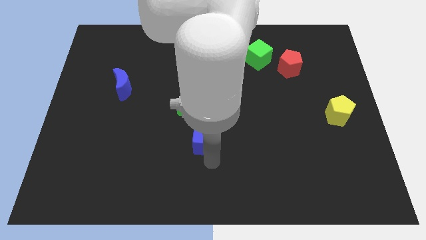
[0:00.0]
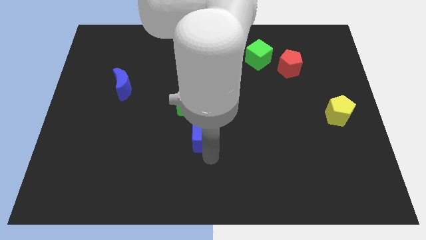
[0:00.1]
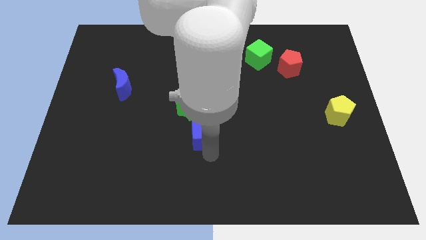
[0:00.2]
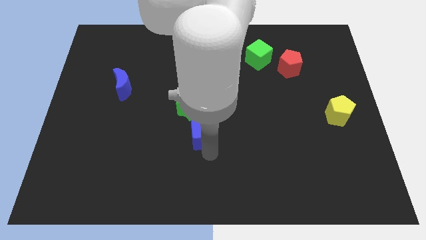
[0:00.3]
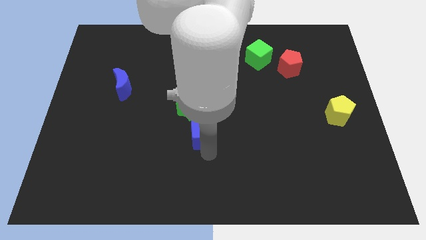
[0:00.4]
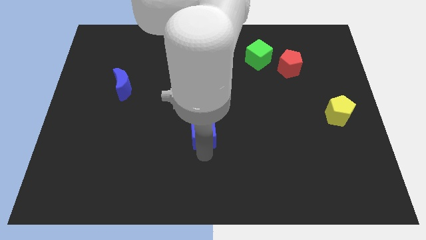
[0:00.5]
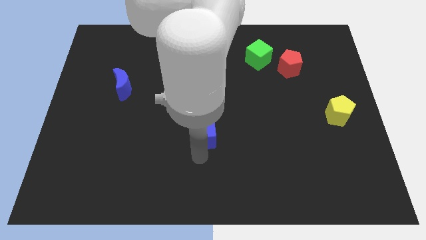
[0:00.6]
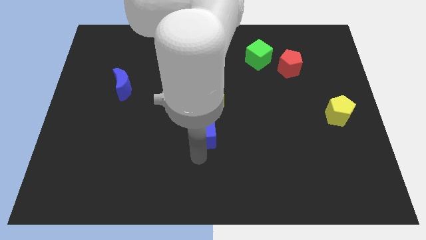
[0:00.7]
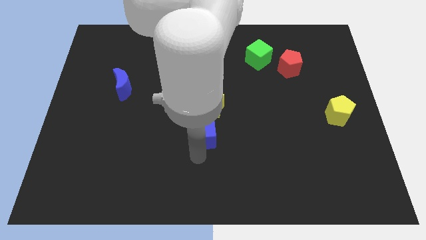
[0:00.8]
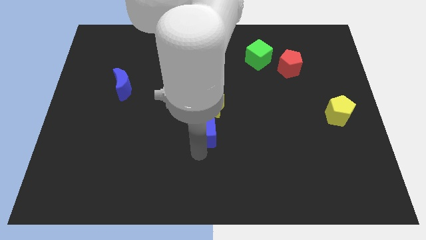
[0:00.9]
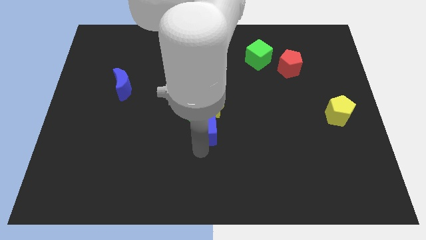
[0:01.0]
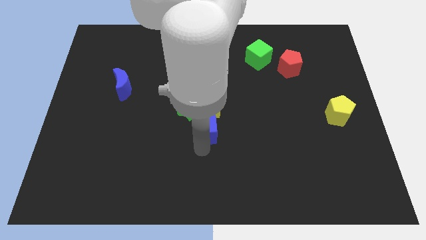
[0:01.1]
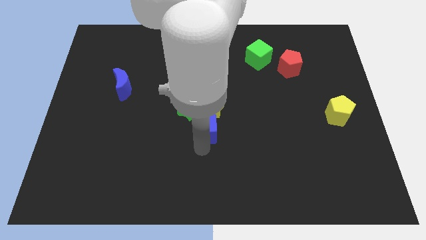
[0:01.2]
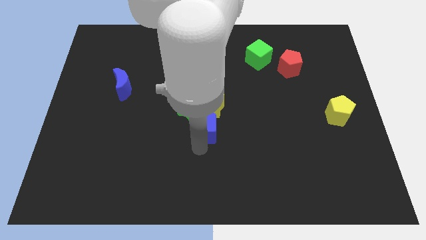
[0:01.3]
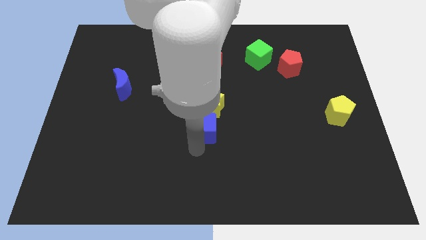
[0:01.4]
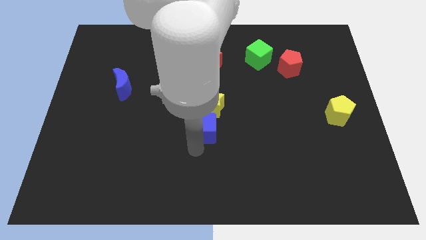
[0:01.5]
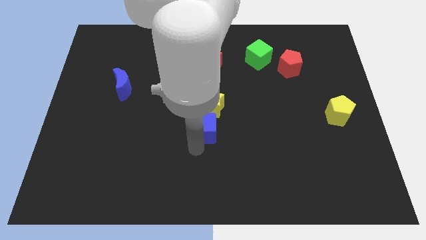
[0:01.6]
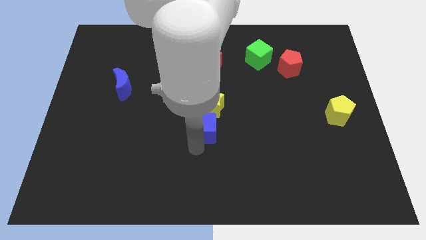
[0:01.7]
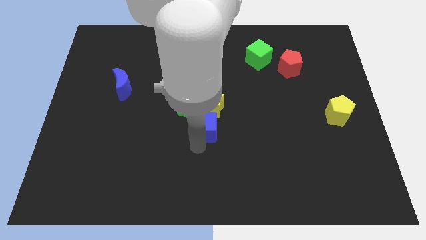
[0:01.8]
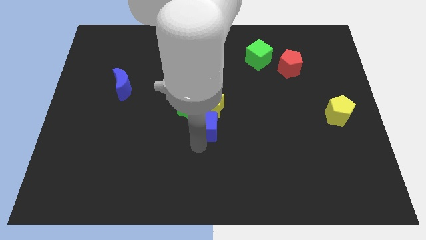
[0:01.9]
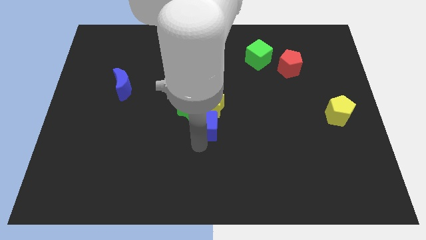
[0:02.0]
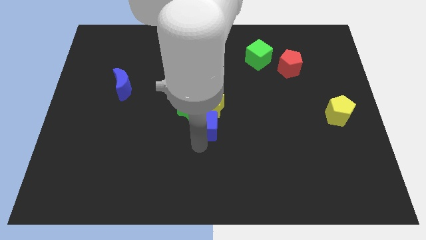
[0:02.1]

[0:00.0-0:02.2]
push the blue cube to the bottom of the yellow star

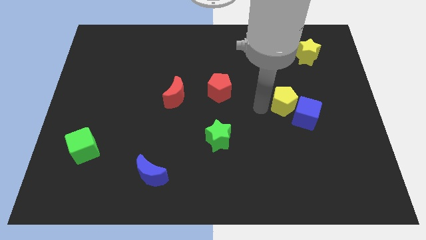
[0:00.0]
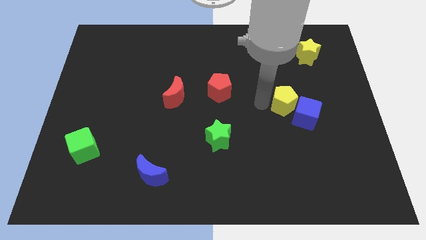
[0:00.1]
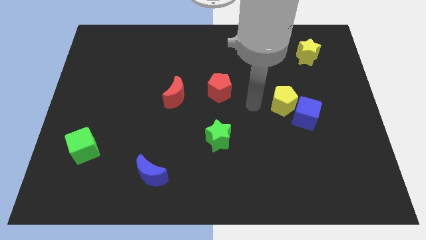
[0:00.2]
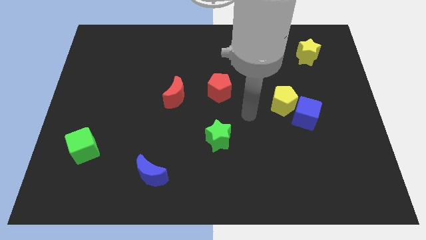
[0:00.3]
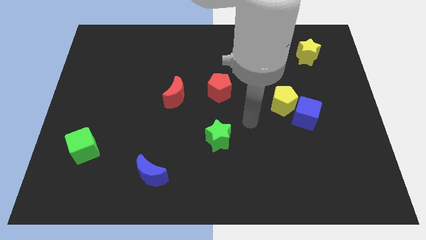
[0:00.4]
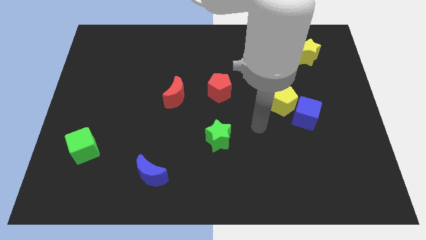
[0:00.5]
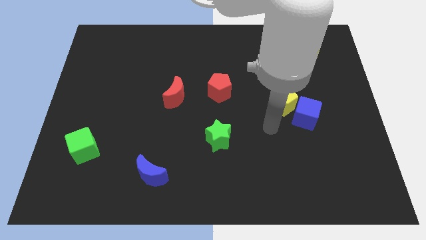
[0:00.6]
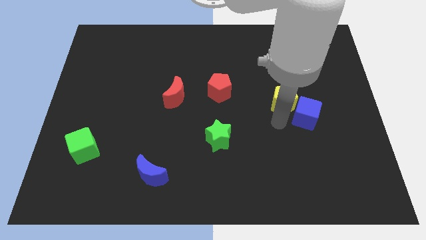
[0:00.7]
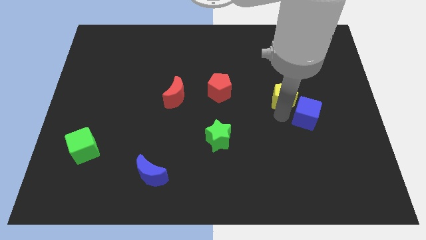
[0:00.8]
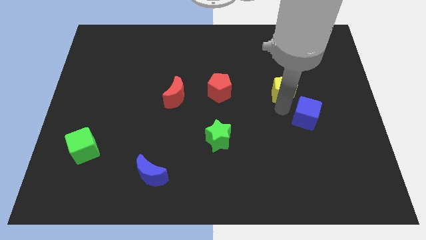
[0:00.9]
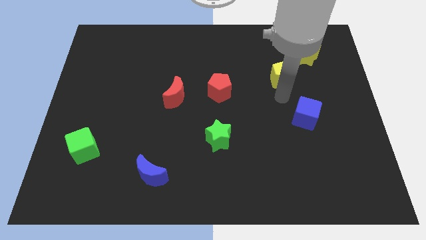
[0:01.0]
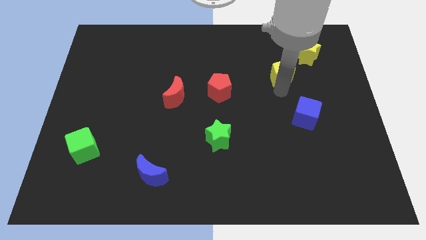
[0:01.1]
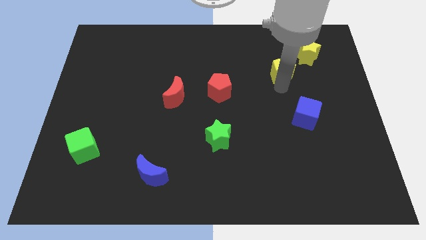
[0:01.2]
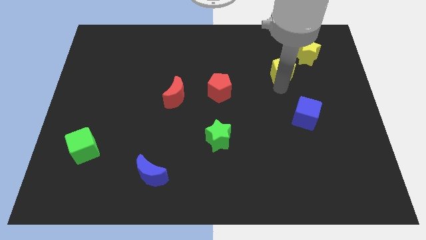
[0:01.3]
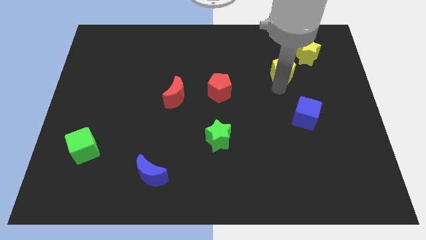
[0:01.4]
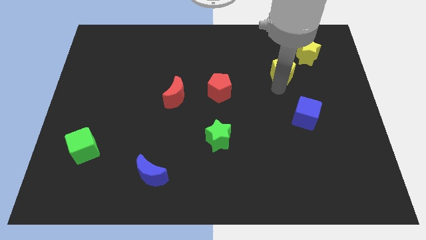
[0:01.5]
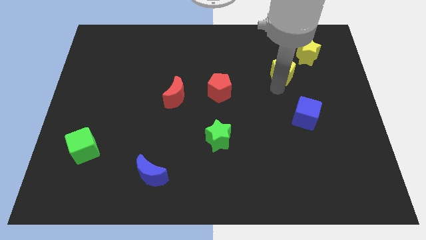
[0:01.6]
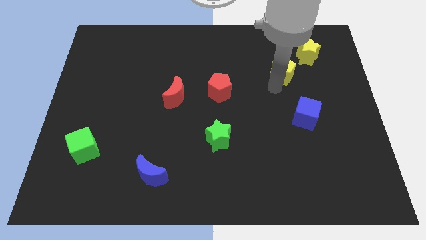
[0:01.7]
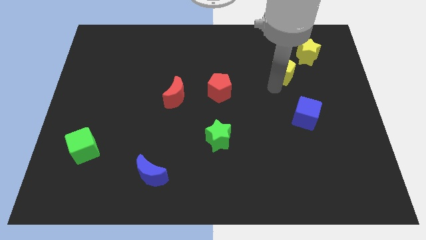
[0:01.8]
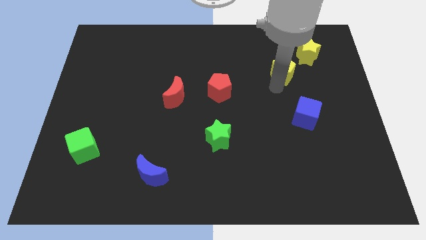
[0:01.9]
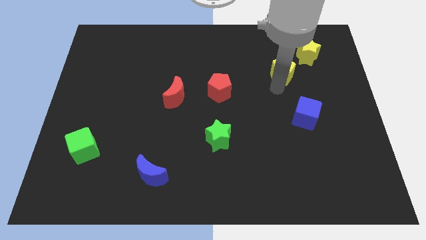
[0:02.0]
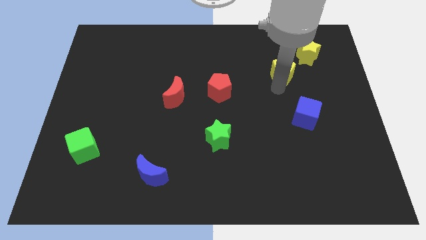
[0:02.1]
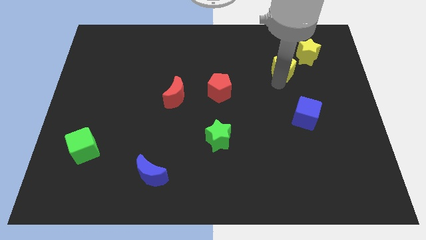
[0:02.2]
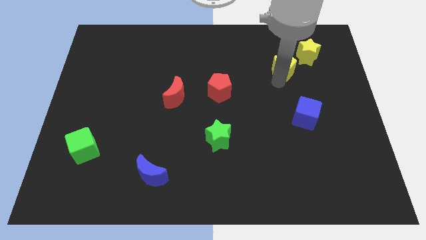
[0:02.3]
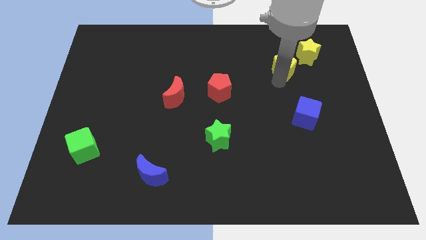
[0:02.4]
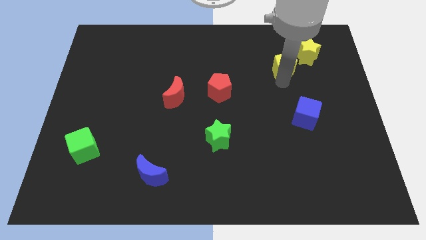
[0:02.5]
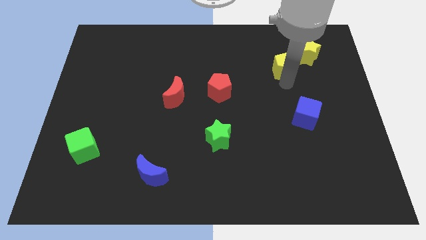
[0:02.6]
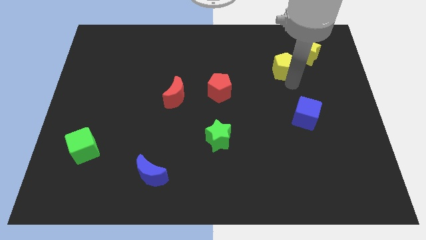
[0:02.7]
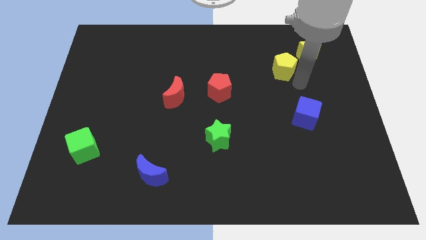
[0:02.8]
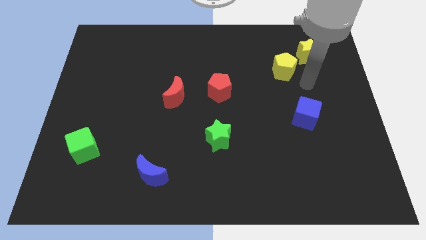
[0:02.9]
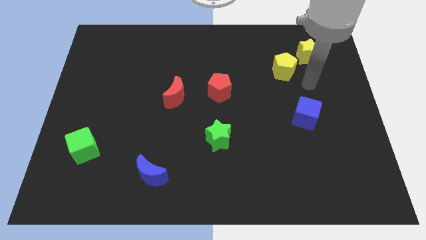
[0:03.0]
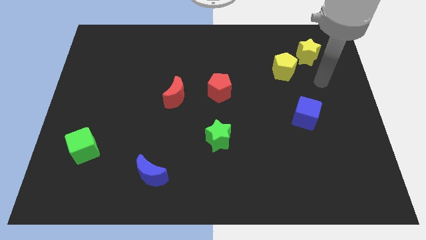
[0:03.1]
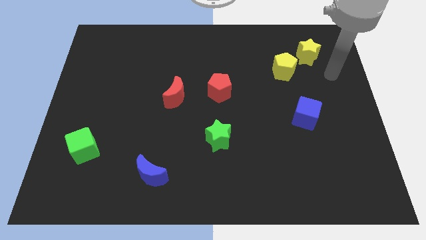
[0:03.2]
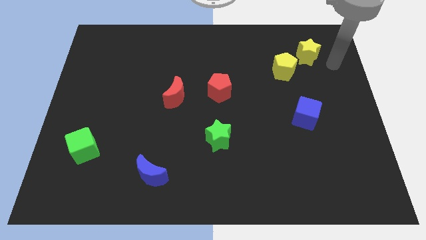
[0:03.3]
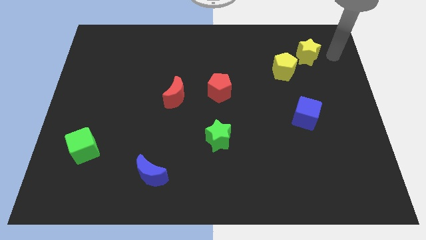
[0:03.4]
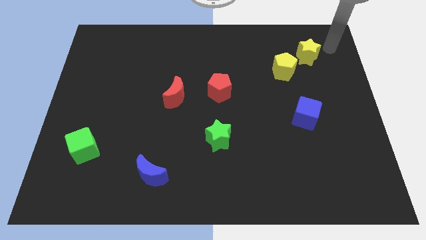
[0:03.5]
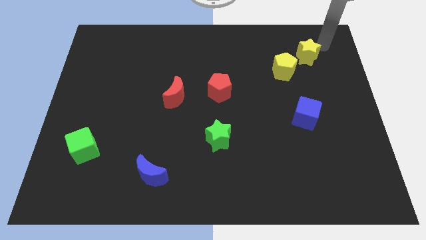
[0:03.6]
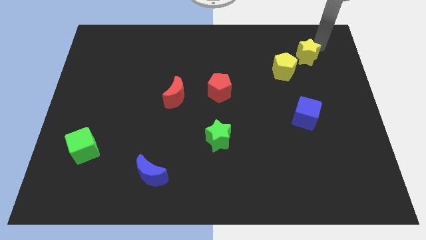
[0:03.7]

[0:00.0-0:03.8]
push the yellow pentagon to the top

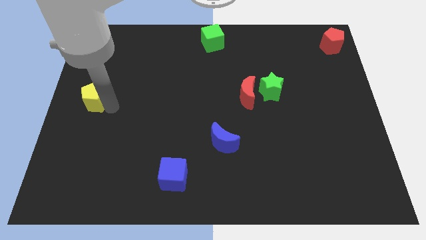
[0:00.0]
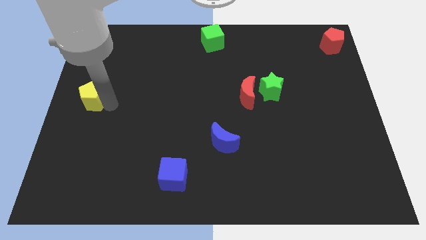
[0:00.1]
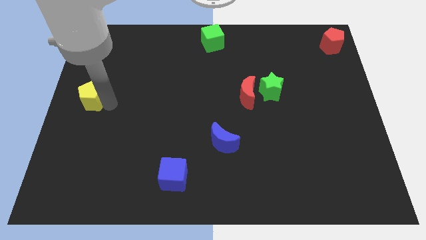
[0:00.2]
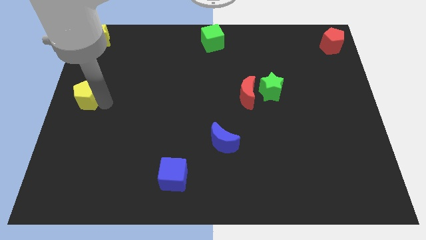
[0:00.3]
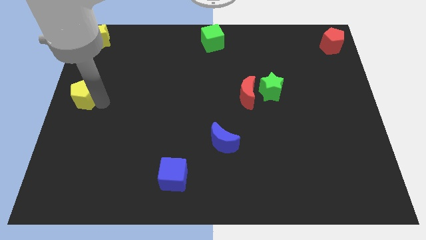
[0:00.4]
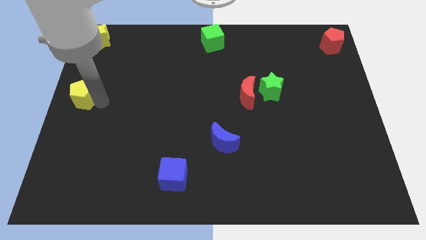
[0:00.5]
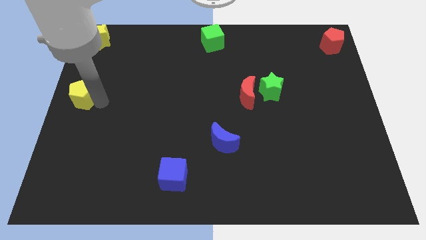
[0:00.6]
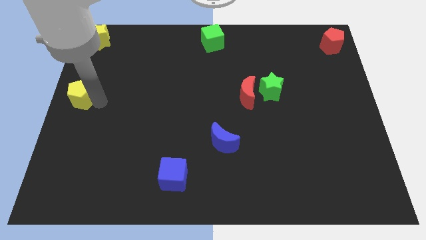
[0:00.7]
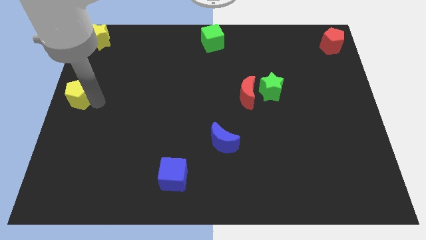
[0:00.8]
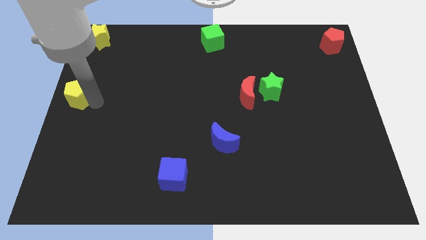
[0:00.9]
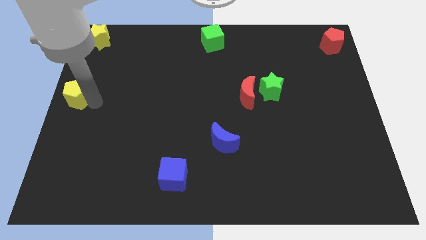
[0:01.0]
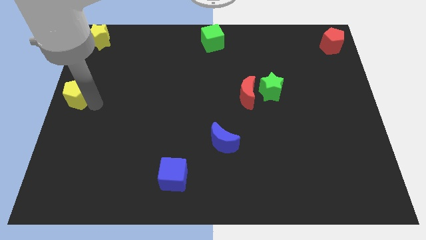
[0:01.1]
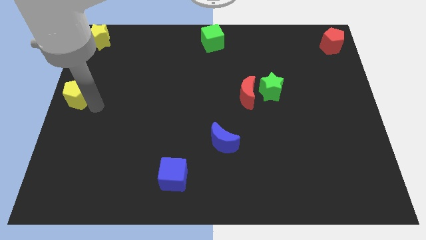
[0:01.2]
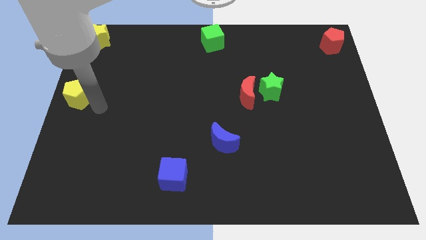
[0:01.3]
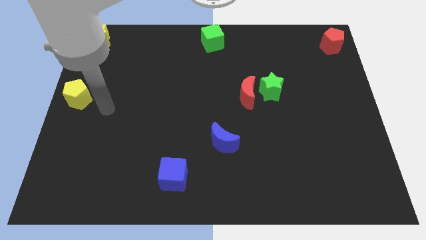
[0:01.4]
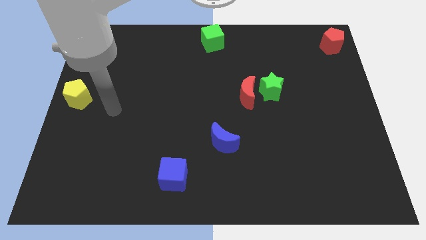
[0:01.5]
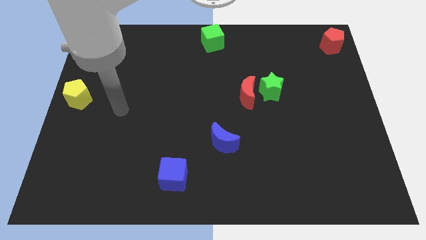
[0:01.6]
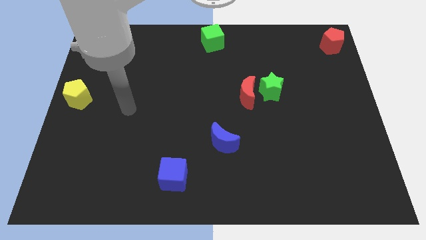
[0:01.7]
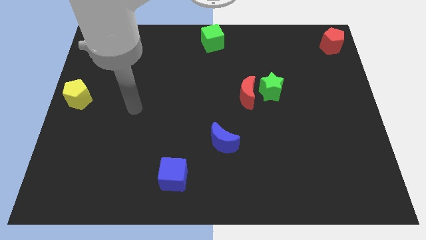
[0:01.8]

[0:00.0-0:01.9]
push the yellow pentagon to the left center of the board

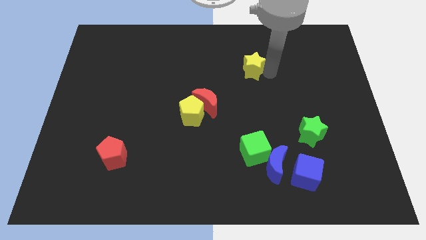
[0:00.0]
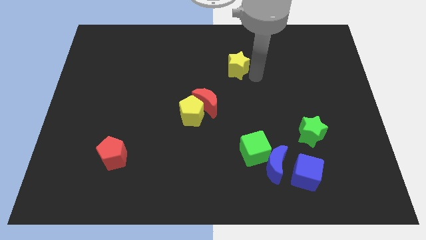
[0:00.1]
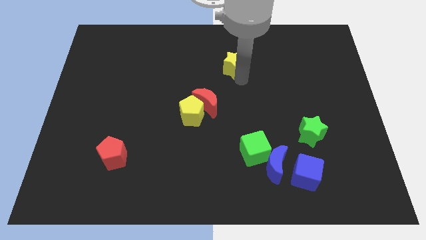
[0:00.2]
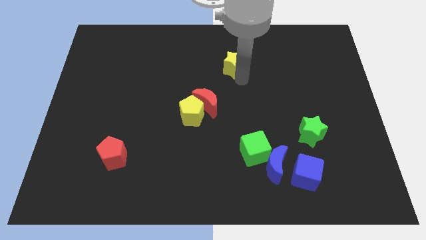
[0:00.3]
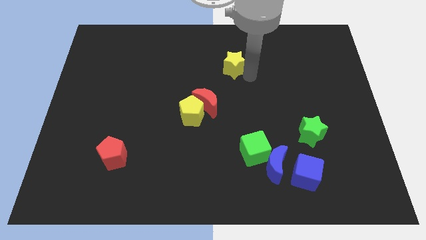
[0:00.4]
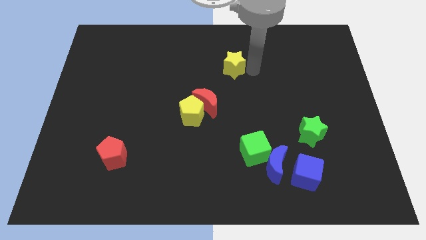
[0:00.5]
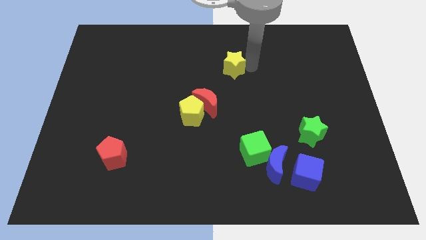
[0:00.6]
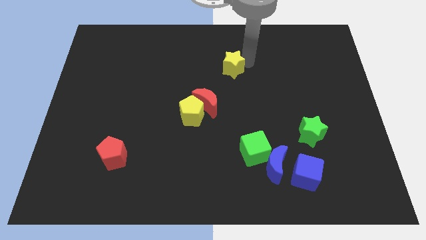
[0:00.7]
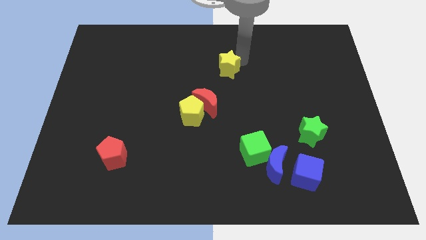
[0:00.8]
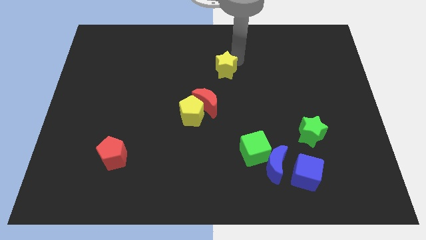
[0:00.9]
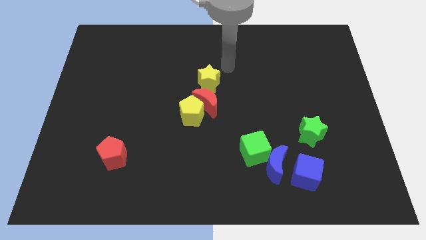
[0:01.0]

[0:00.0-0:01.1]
place the yellow star vertically above the red moon
